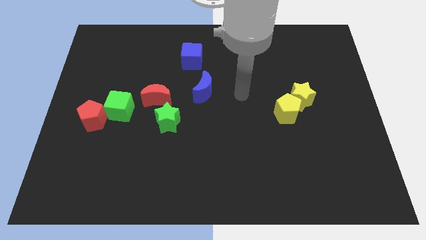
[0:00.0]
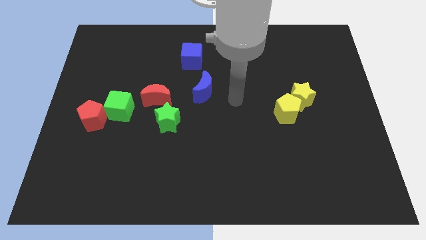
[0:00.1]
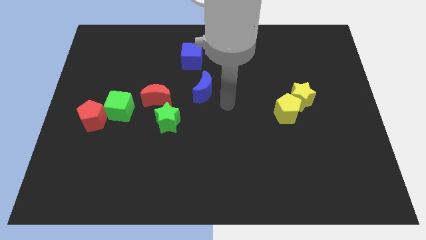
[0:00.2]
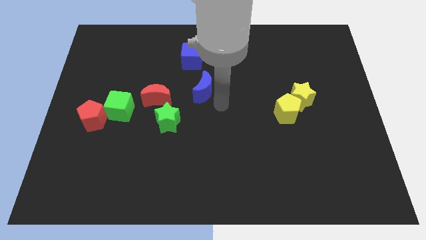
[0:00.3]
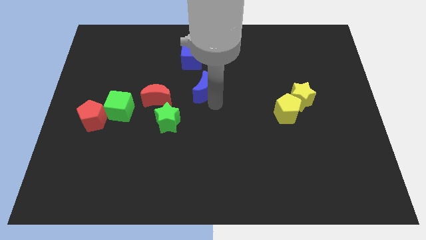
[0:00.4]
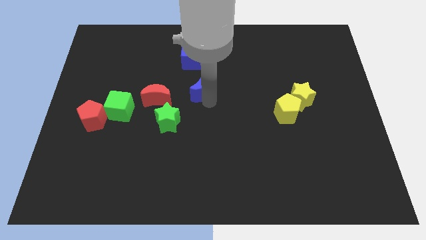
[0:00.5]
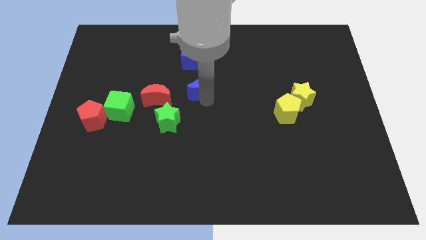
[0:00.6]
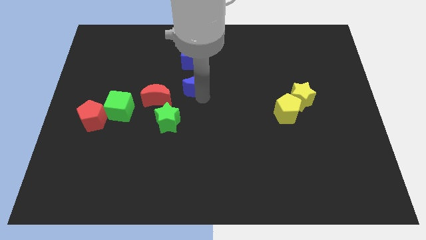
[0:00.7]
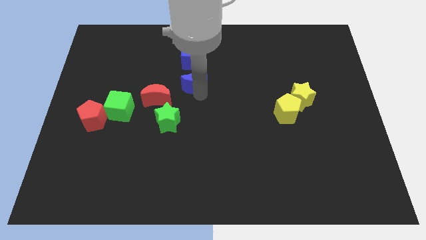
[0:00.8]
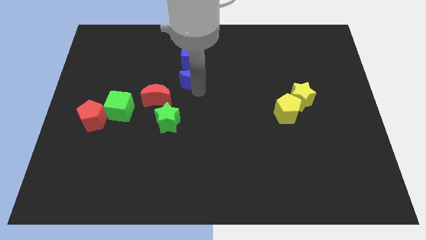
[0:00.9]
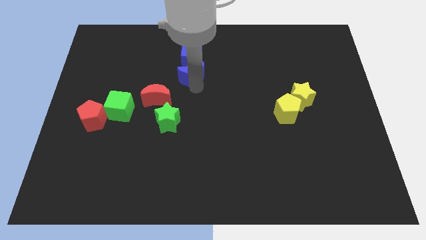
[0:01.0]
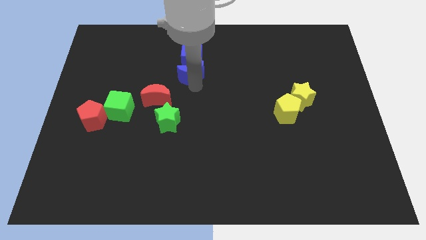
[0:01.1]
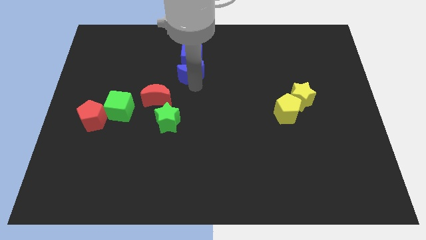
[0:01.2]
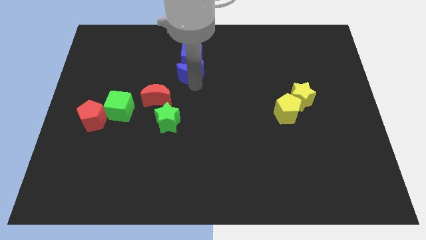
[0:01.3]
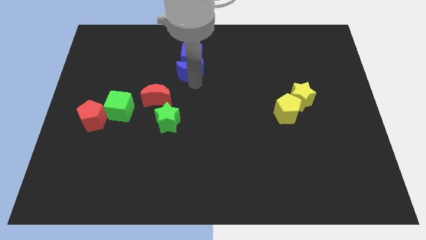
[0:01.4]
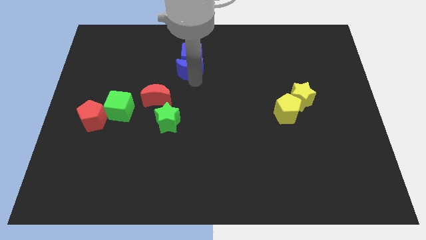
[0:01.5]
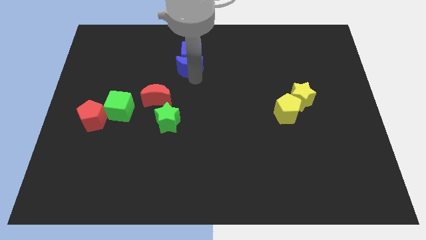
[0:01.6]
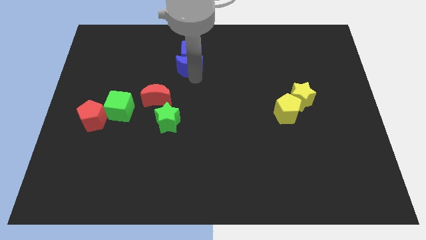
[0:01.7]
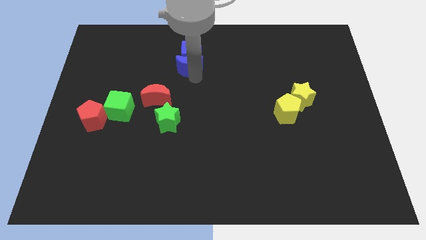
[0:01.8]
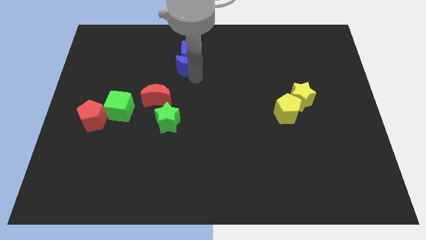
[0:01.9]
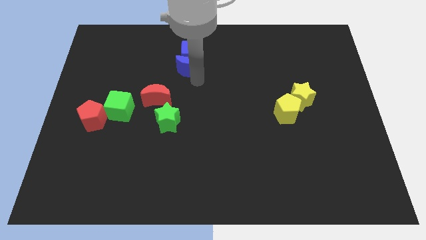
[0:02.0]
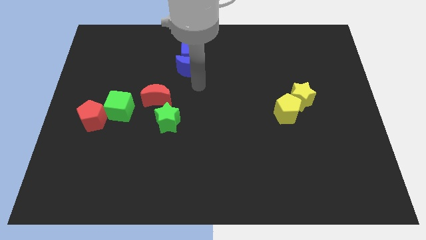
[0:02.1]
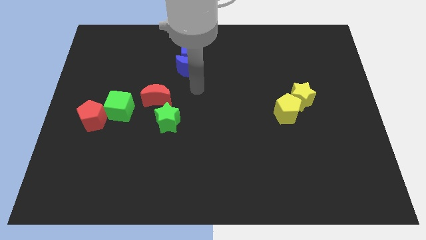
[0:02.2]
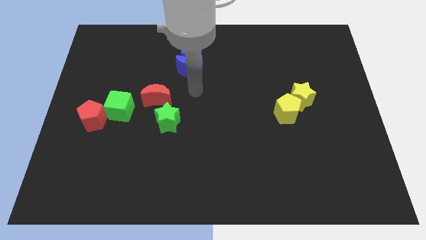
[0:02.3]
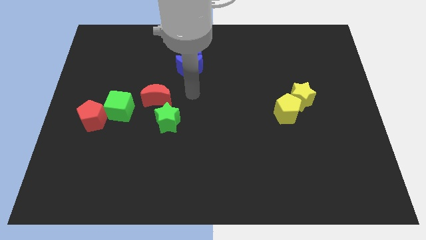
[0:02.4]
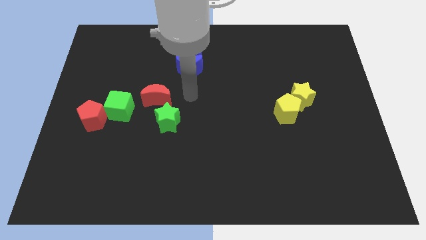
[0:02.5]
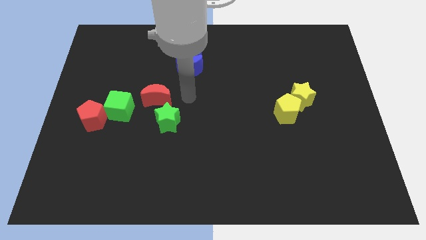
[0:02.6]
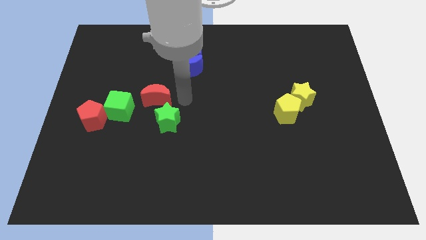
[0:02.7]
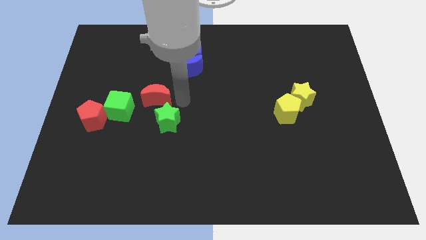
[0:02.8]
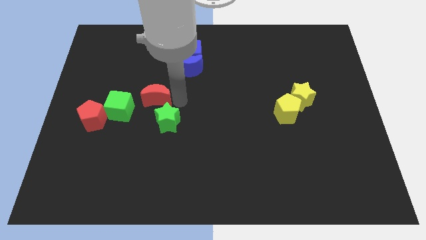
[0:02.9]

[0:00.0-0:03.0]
slide the blue moon to the bottom of the blue cube

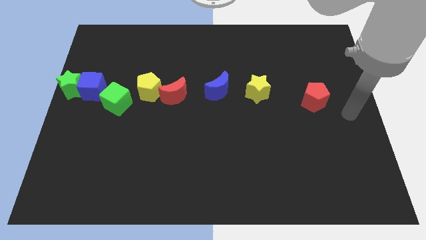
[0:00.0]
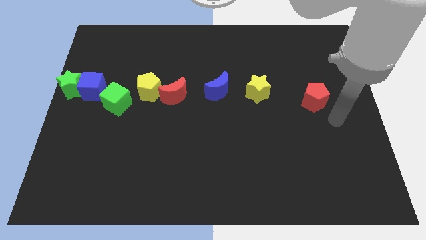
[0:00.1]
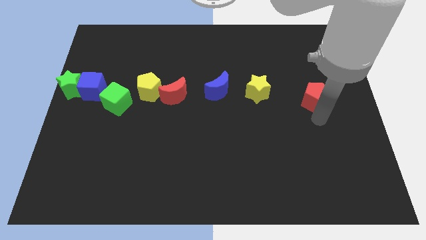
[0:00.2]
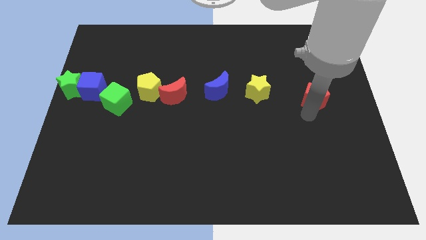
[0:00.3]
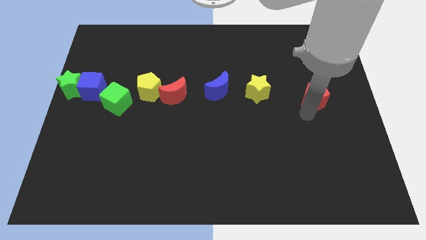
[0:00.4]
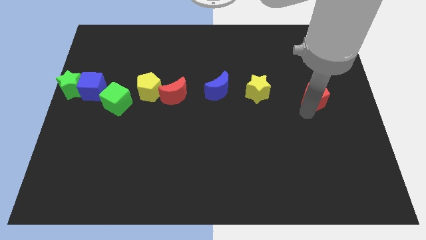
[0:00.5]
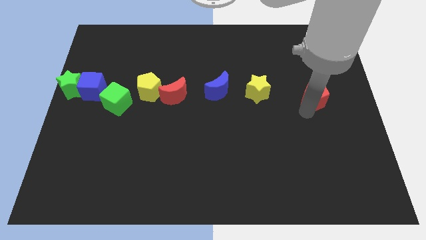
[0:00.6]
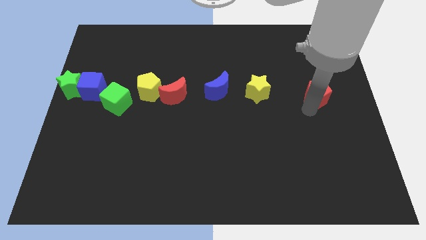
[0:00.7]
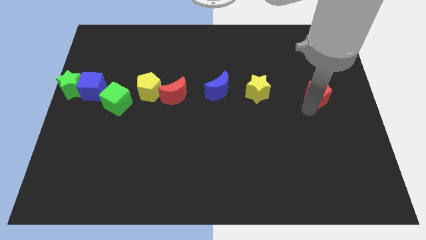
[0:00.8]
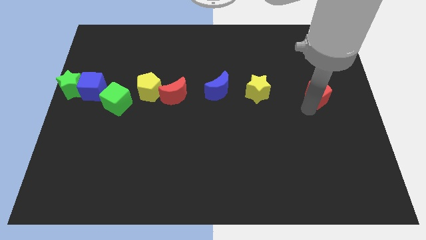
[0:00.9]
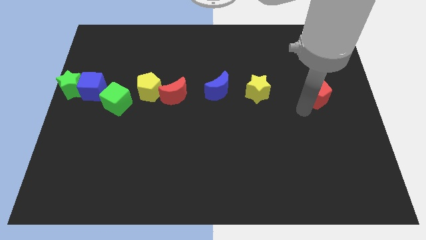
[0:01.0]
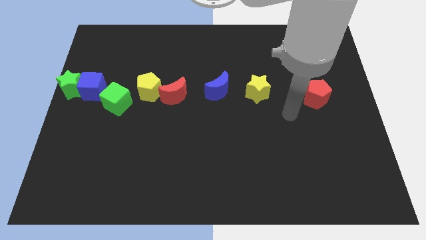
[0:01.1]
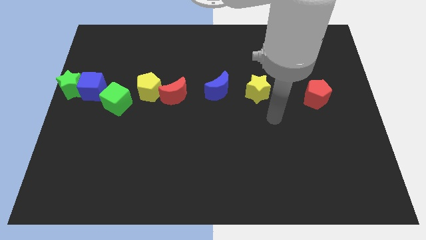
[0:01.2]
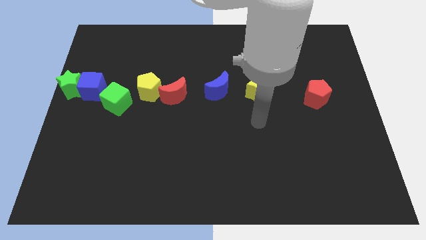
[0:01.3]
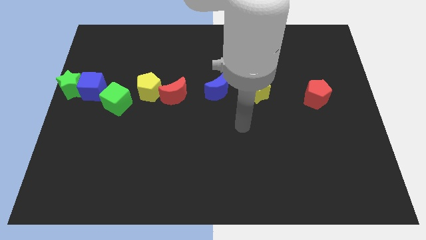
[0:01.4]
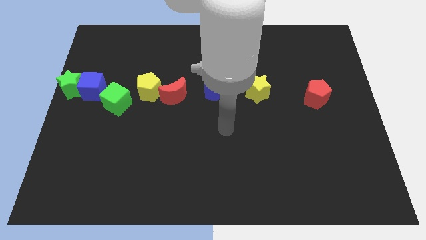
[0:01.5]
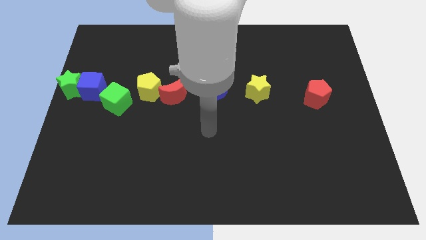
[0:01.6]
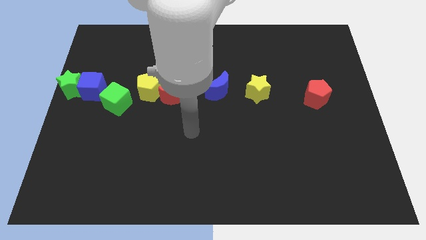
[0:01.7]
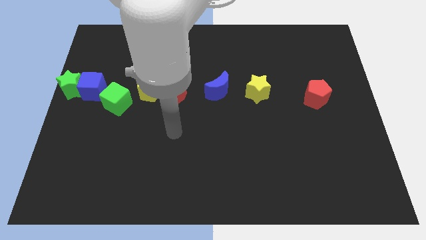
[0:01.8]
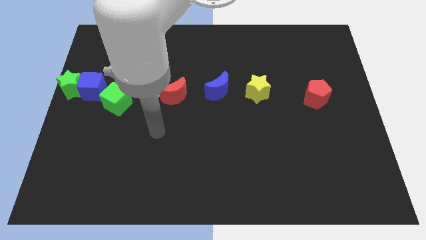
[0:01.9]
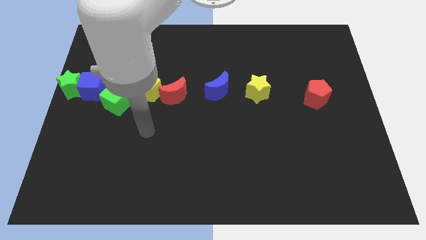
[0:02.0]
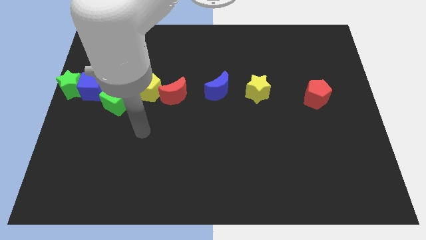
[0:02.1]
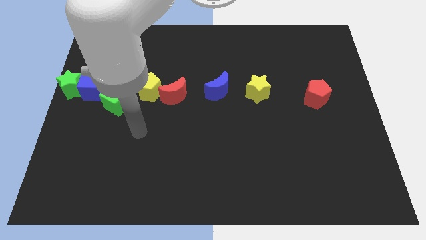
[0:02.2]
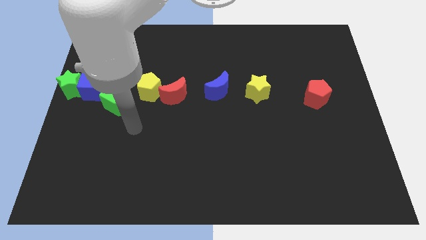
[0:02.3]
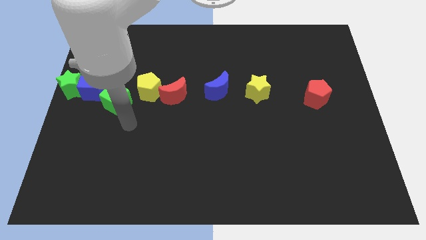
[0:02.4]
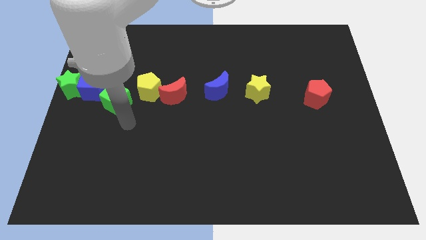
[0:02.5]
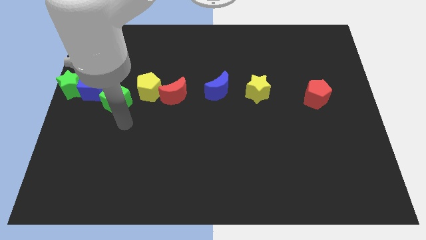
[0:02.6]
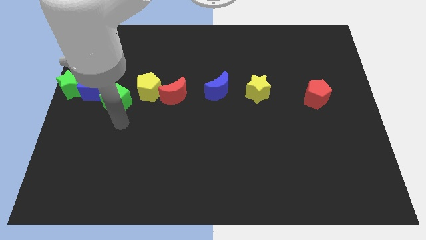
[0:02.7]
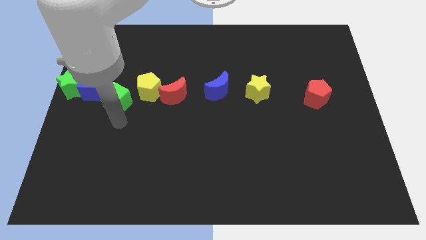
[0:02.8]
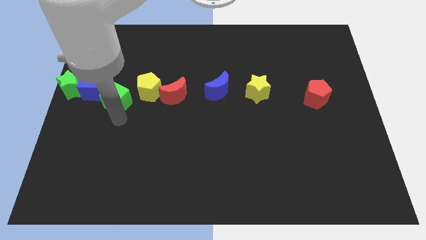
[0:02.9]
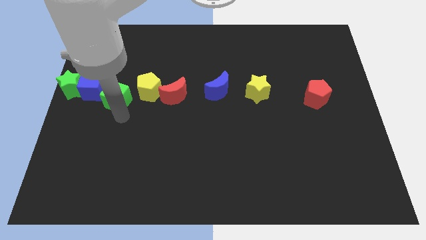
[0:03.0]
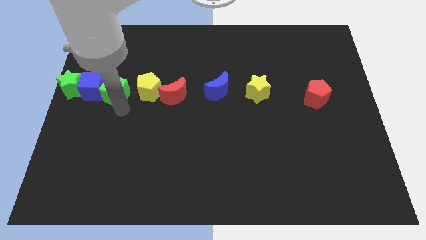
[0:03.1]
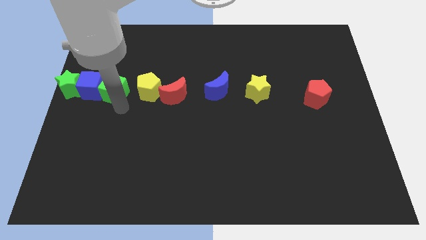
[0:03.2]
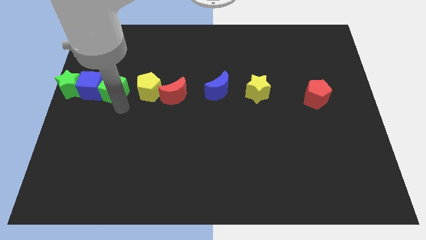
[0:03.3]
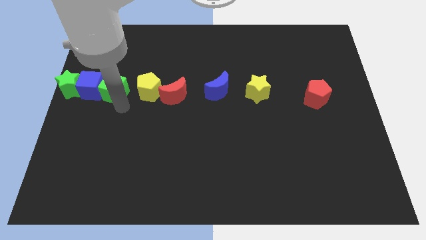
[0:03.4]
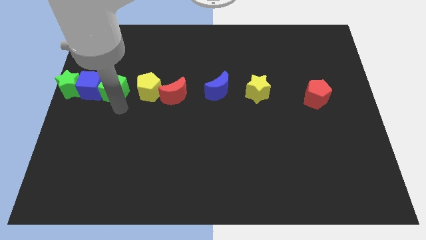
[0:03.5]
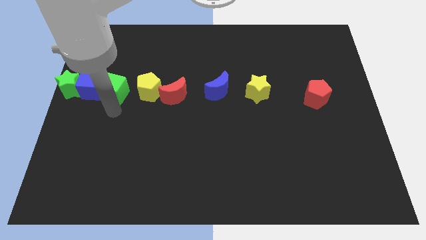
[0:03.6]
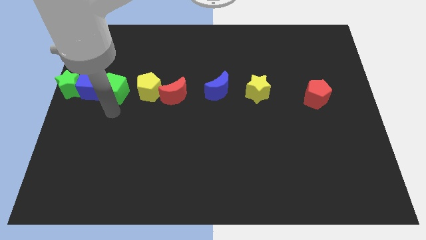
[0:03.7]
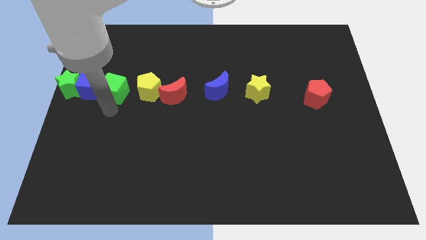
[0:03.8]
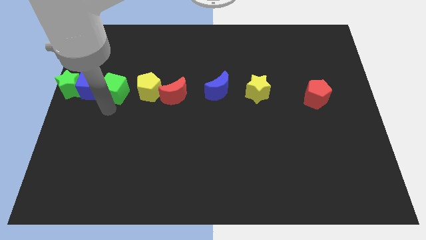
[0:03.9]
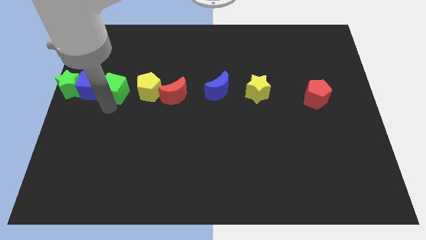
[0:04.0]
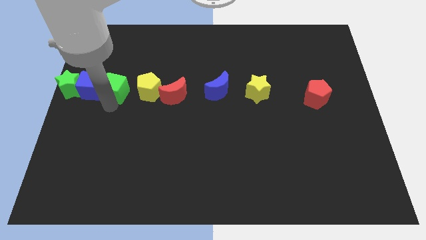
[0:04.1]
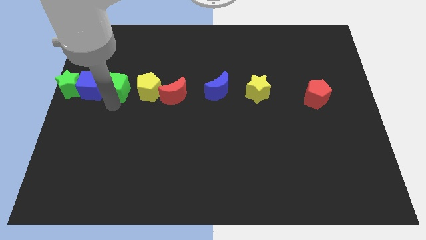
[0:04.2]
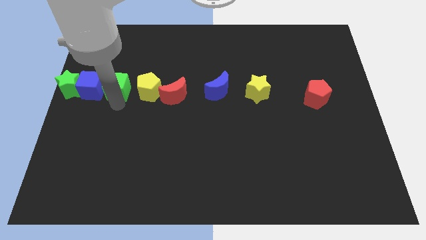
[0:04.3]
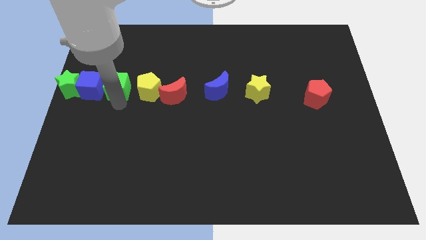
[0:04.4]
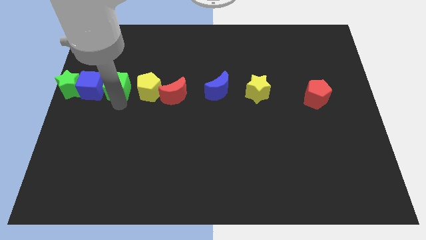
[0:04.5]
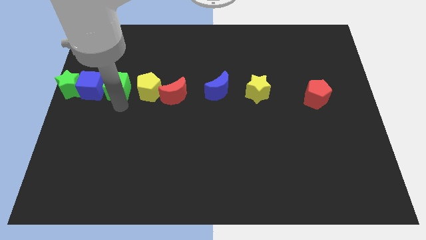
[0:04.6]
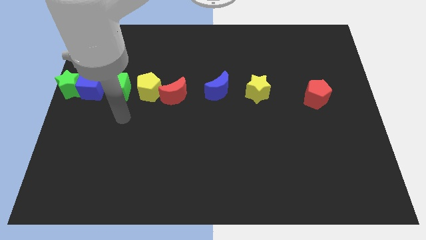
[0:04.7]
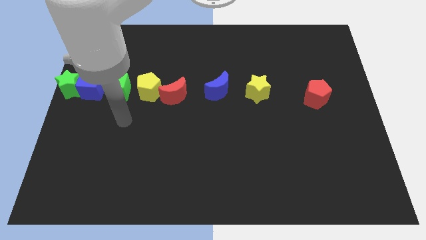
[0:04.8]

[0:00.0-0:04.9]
line the blocks up horizontally

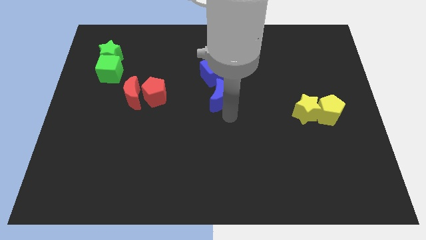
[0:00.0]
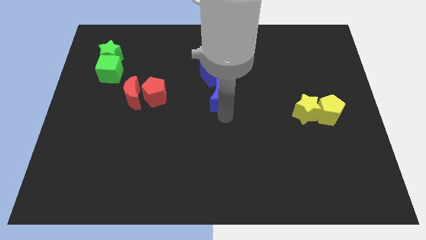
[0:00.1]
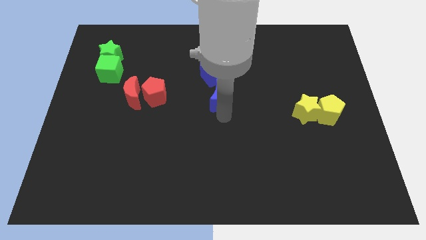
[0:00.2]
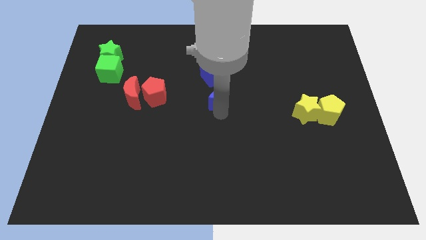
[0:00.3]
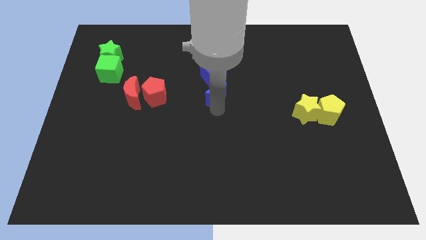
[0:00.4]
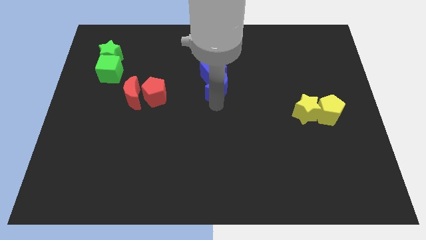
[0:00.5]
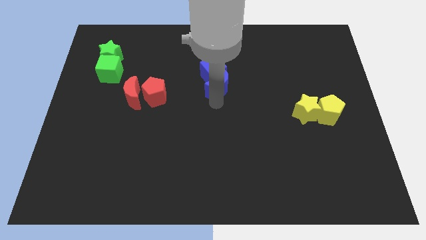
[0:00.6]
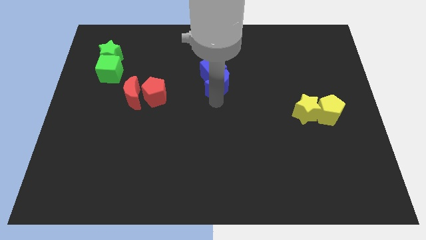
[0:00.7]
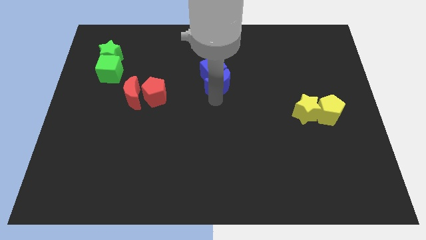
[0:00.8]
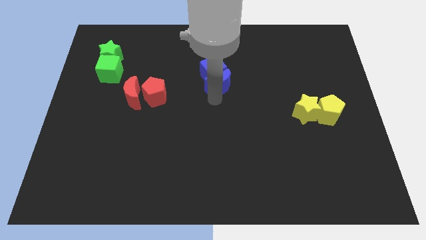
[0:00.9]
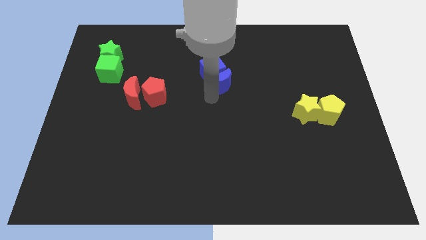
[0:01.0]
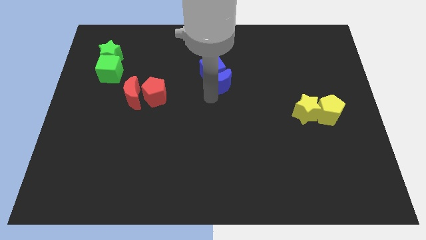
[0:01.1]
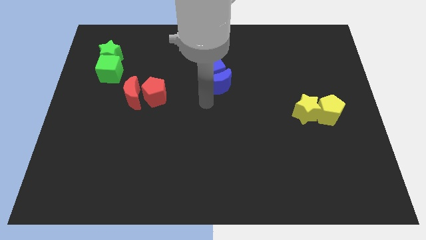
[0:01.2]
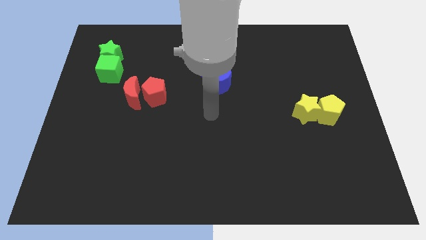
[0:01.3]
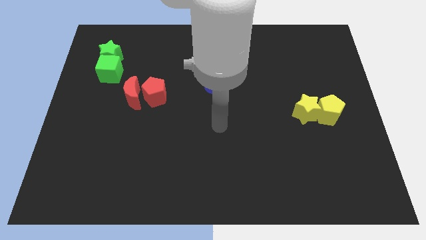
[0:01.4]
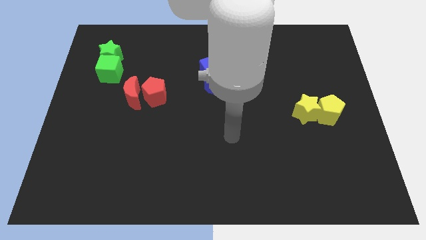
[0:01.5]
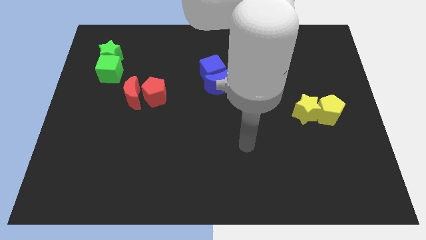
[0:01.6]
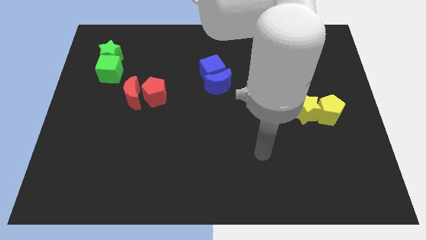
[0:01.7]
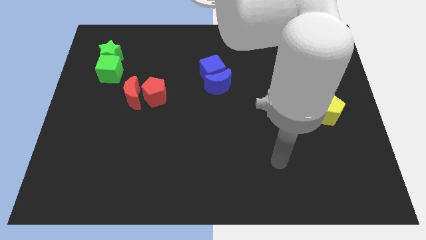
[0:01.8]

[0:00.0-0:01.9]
push the blue moon close to the blue cube
